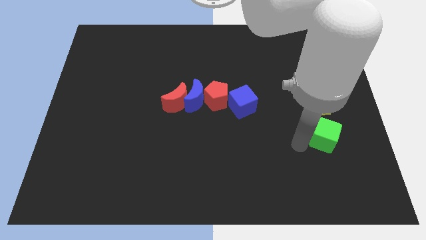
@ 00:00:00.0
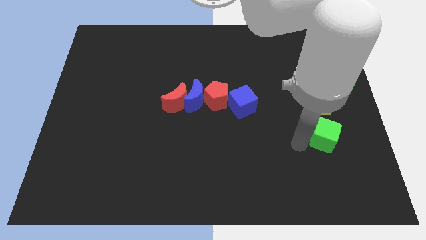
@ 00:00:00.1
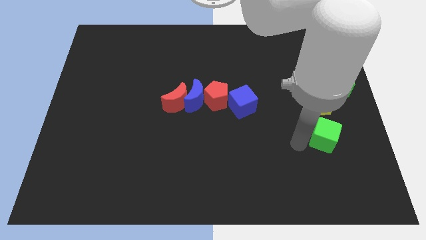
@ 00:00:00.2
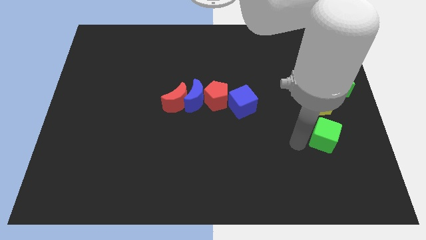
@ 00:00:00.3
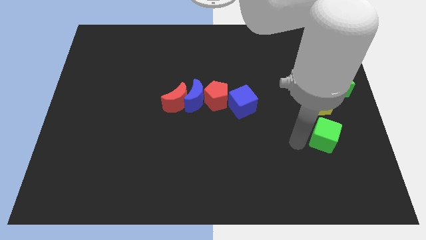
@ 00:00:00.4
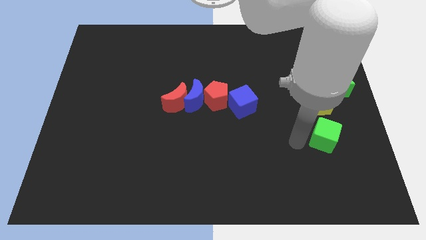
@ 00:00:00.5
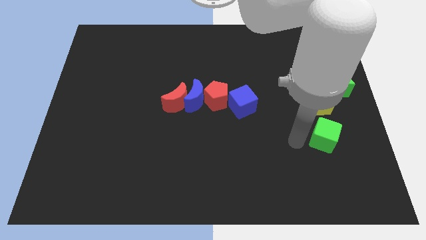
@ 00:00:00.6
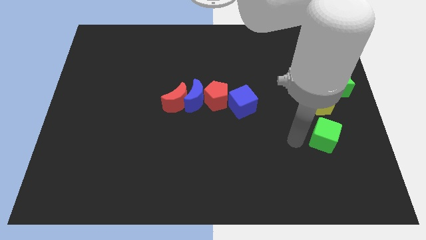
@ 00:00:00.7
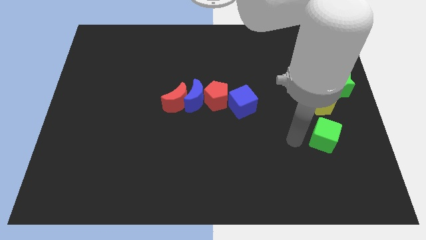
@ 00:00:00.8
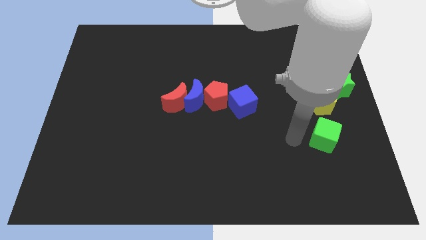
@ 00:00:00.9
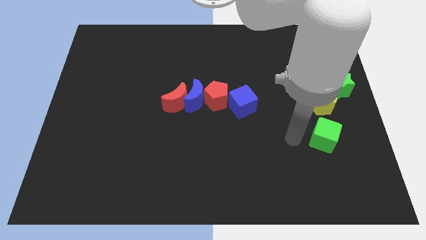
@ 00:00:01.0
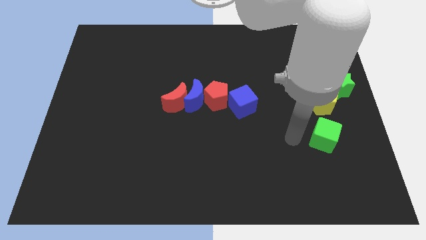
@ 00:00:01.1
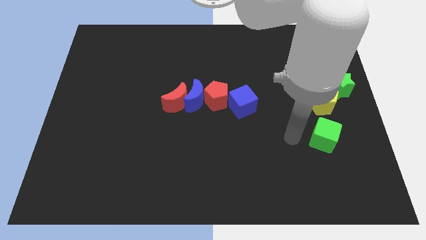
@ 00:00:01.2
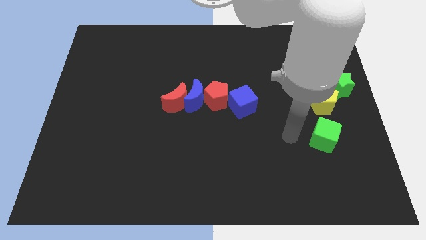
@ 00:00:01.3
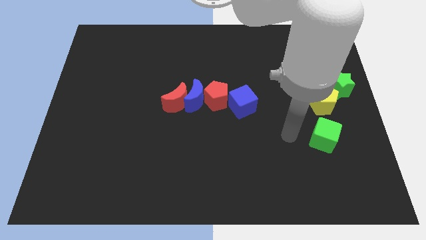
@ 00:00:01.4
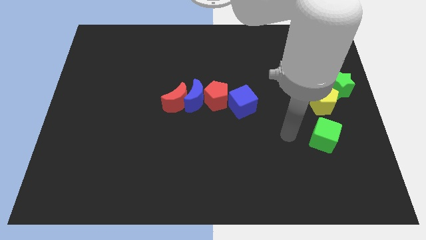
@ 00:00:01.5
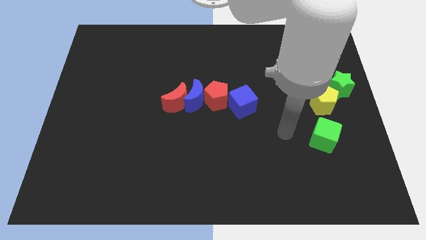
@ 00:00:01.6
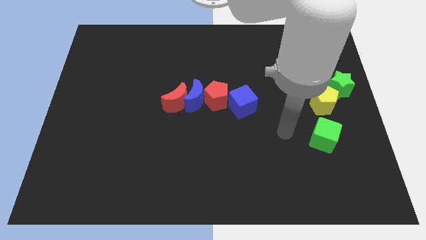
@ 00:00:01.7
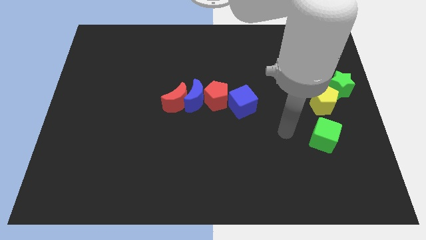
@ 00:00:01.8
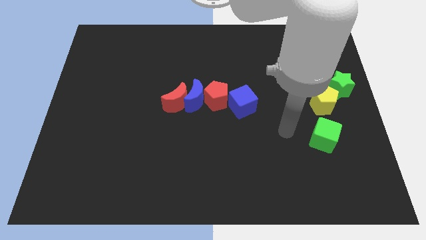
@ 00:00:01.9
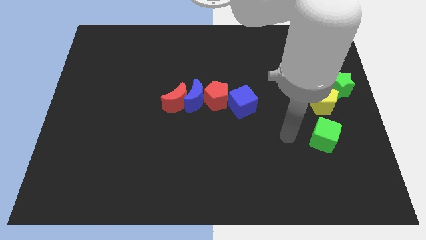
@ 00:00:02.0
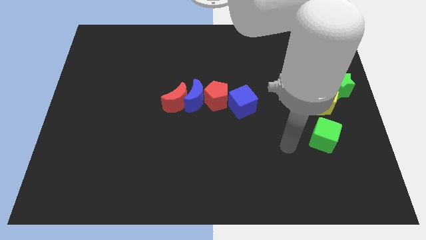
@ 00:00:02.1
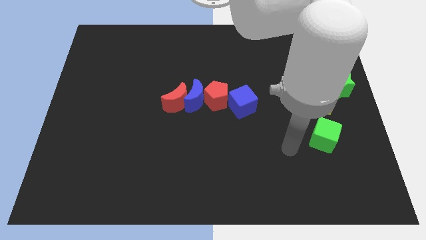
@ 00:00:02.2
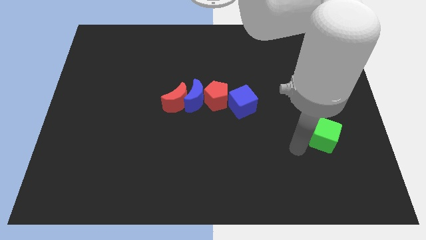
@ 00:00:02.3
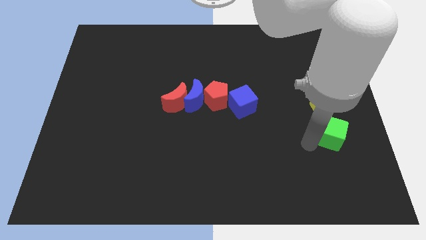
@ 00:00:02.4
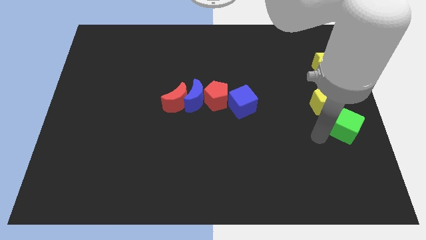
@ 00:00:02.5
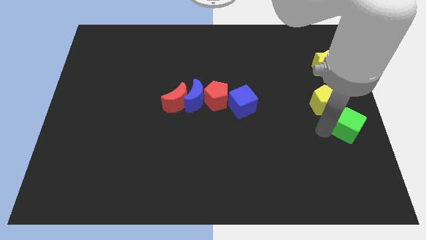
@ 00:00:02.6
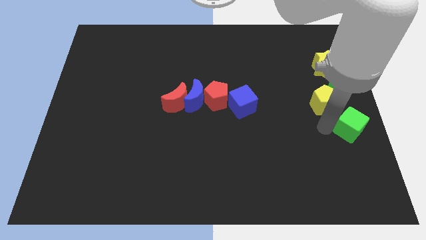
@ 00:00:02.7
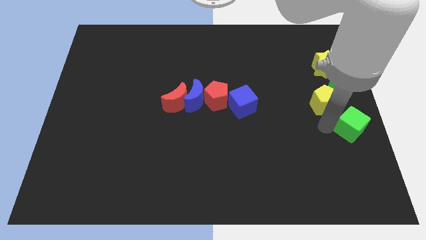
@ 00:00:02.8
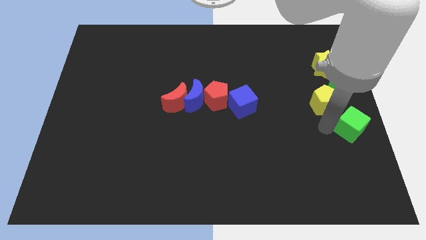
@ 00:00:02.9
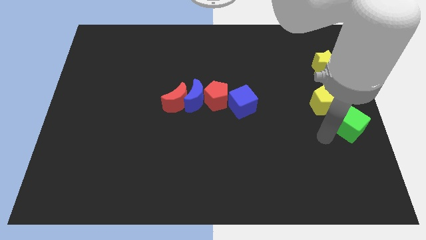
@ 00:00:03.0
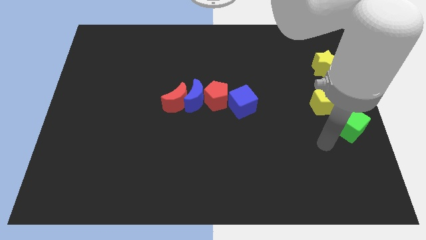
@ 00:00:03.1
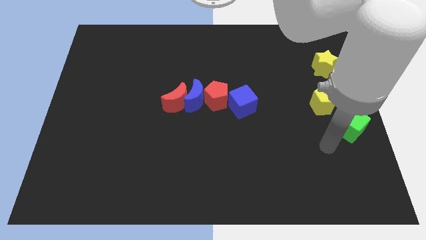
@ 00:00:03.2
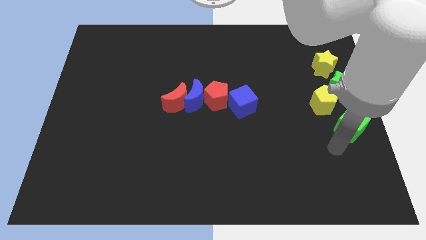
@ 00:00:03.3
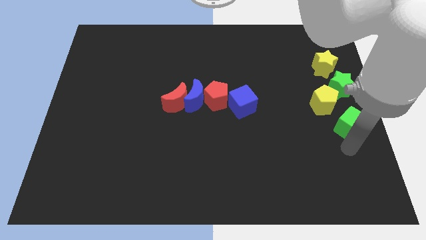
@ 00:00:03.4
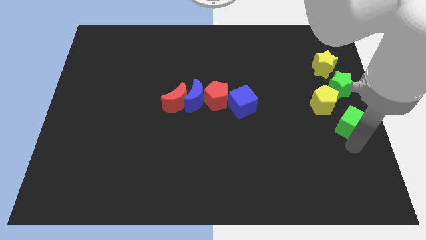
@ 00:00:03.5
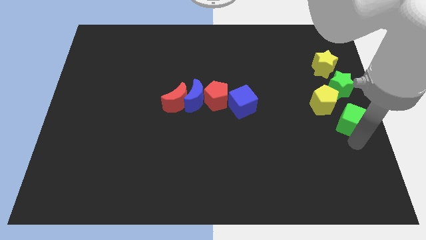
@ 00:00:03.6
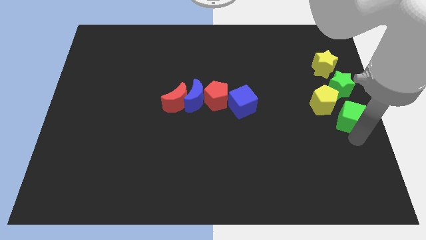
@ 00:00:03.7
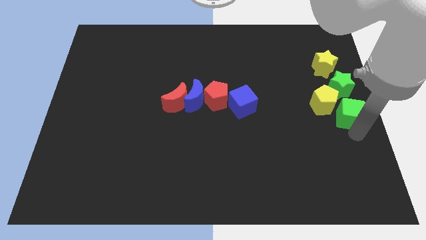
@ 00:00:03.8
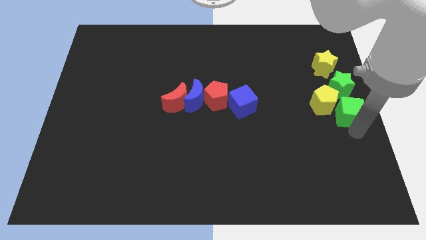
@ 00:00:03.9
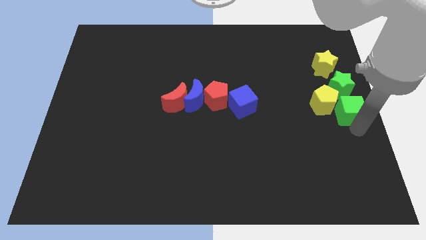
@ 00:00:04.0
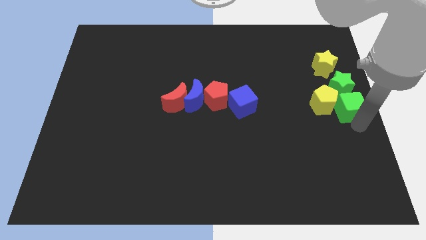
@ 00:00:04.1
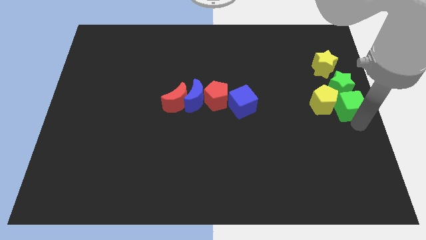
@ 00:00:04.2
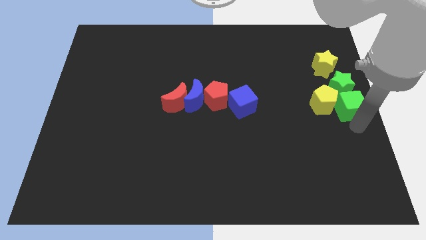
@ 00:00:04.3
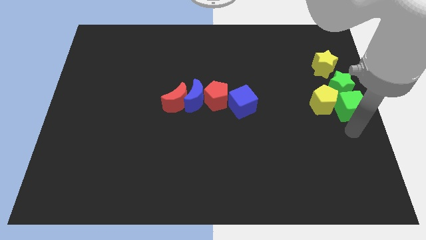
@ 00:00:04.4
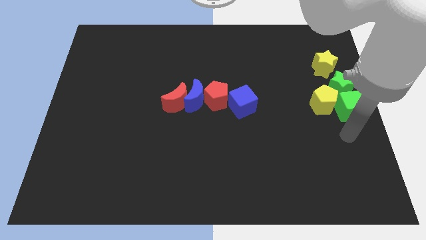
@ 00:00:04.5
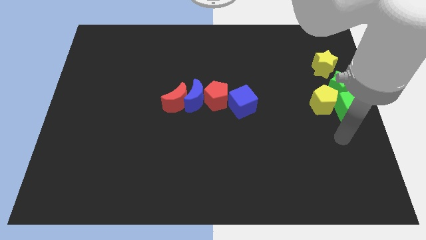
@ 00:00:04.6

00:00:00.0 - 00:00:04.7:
place the green cube right to the yellow pentagon

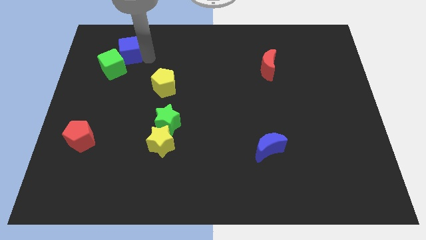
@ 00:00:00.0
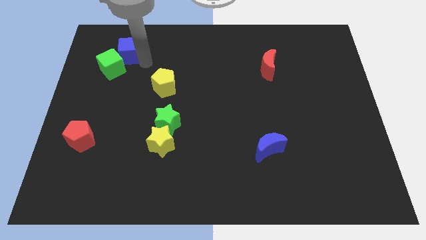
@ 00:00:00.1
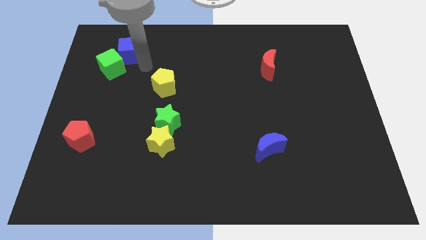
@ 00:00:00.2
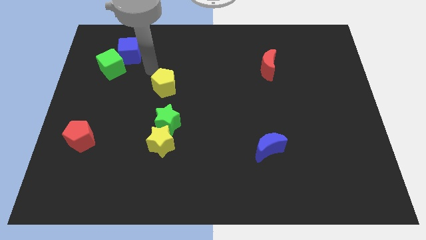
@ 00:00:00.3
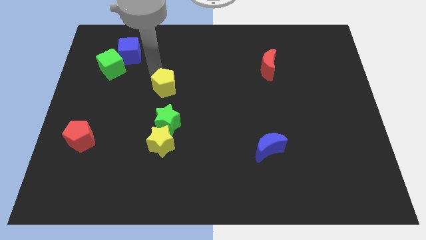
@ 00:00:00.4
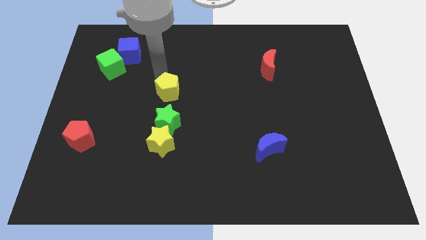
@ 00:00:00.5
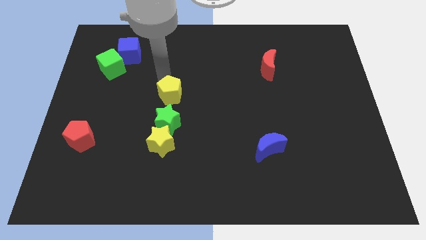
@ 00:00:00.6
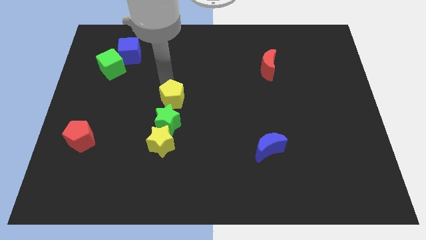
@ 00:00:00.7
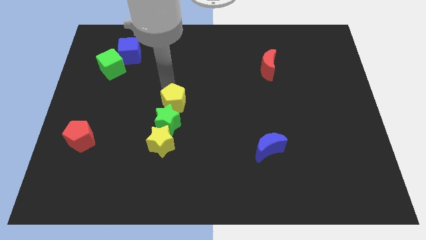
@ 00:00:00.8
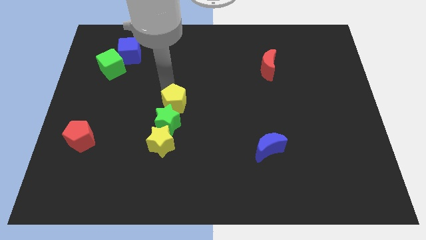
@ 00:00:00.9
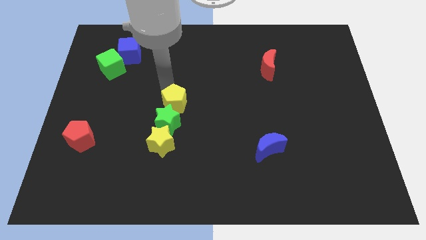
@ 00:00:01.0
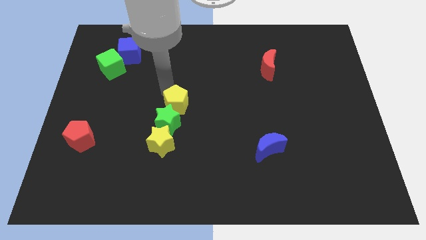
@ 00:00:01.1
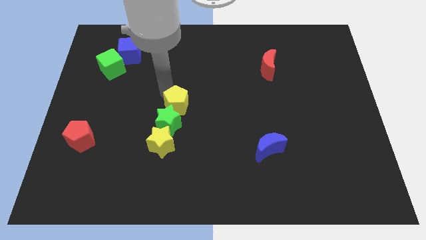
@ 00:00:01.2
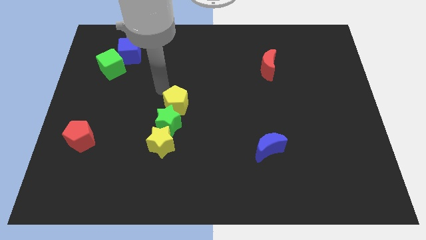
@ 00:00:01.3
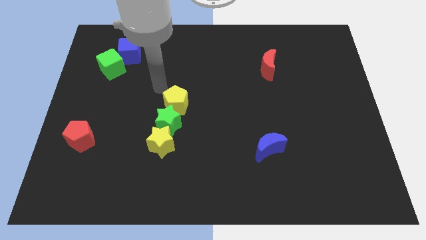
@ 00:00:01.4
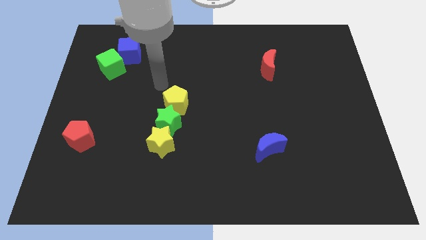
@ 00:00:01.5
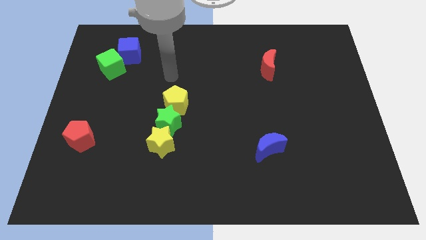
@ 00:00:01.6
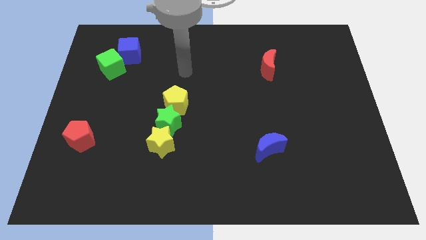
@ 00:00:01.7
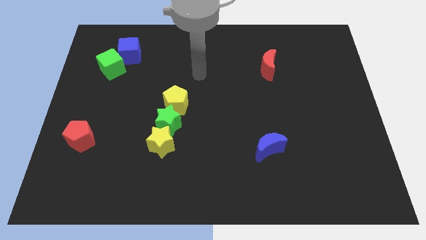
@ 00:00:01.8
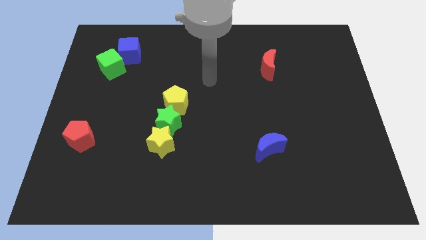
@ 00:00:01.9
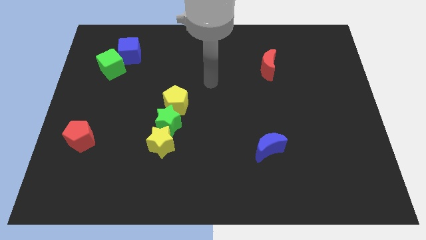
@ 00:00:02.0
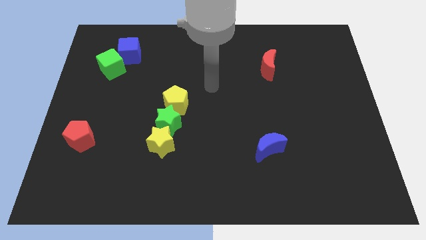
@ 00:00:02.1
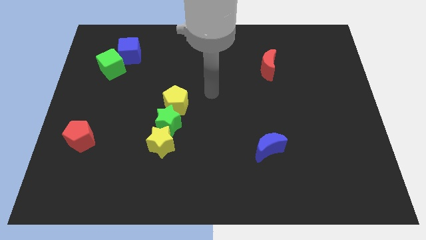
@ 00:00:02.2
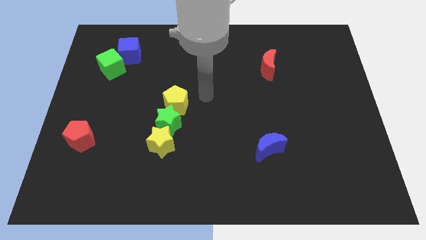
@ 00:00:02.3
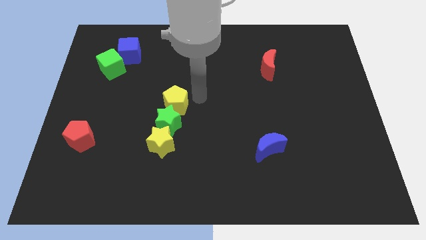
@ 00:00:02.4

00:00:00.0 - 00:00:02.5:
push yellow pentagon into the green star

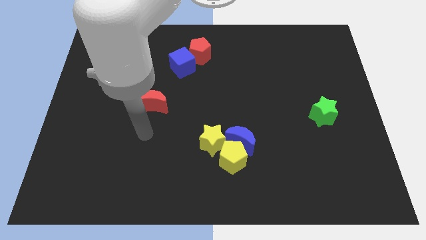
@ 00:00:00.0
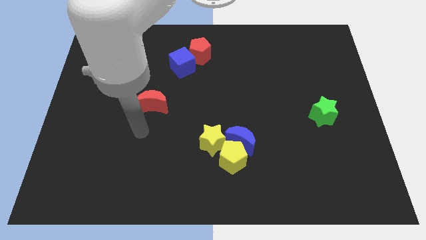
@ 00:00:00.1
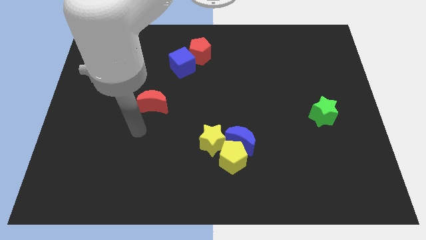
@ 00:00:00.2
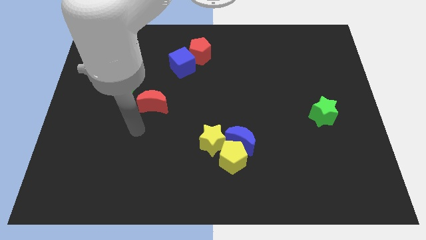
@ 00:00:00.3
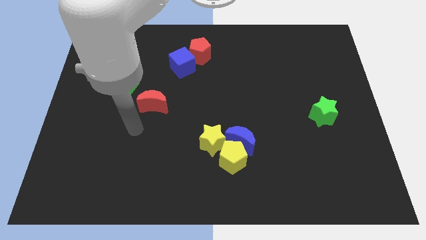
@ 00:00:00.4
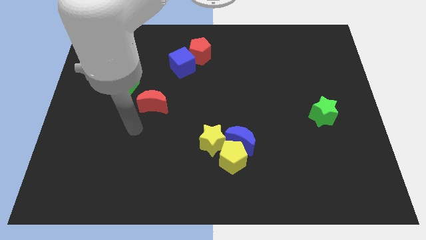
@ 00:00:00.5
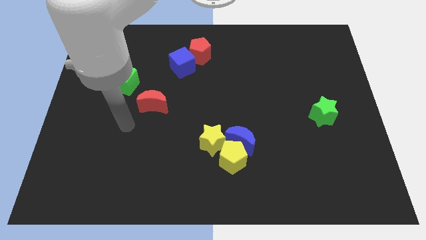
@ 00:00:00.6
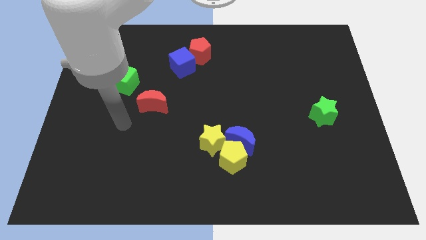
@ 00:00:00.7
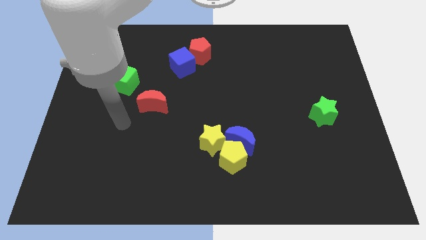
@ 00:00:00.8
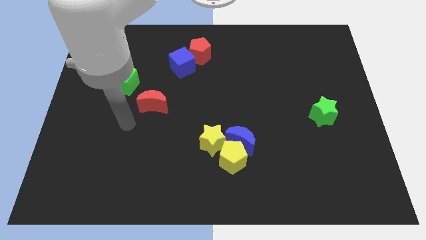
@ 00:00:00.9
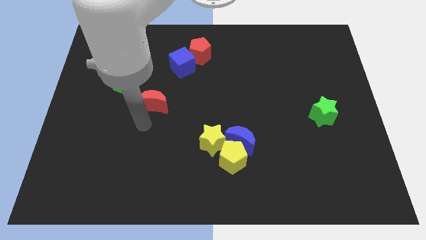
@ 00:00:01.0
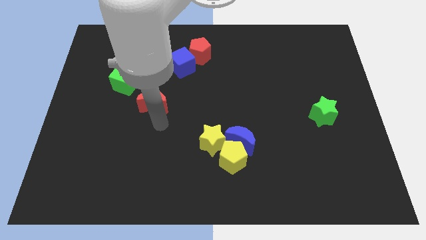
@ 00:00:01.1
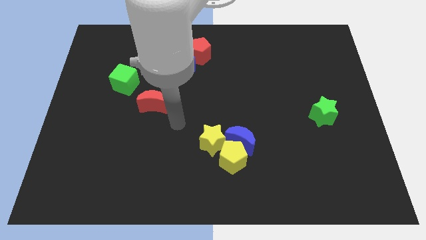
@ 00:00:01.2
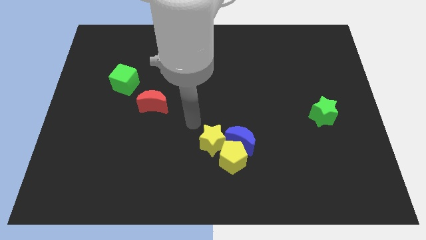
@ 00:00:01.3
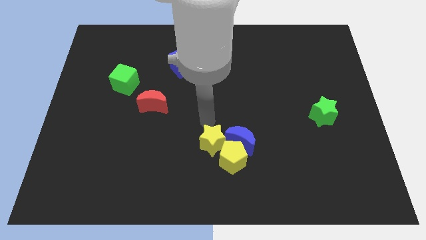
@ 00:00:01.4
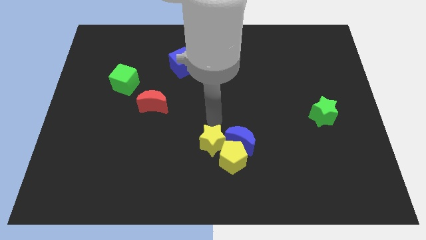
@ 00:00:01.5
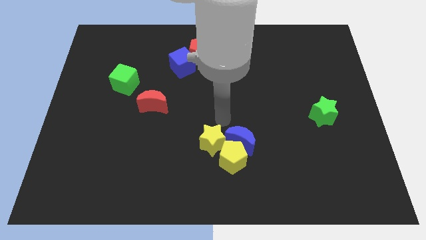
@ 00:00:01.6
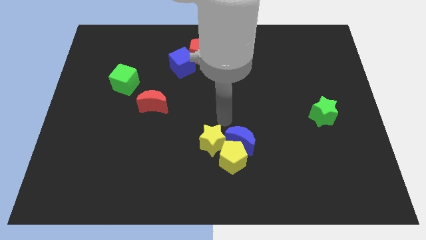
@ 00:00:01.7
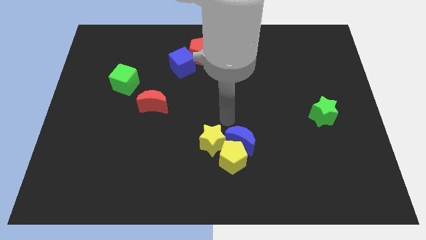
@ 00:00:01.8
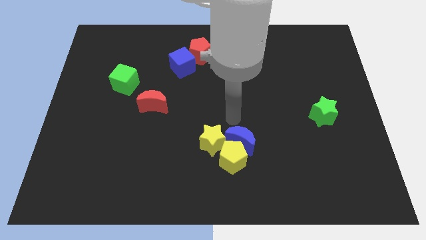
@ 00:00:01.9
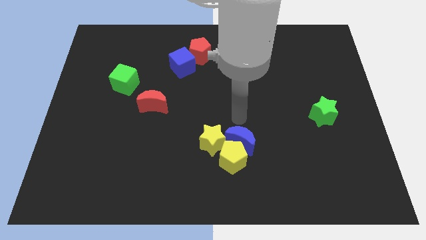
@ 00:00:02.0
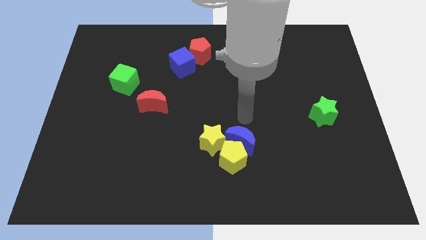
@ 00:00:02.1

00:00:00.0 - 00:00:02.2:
point the arm above the blue moon
